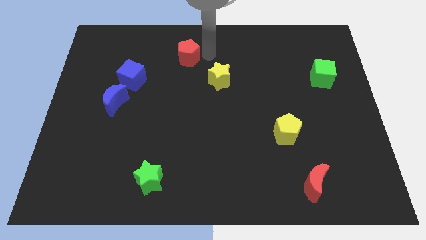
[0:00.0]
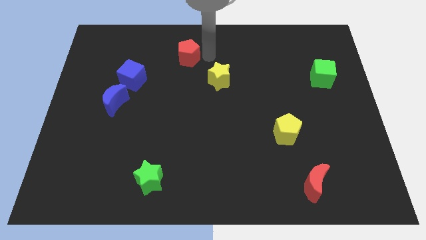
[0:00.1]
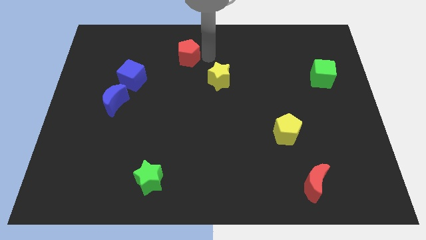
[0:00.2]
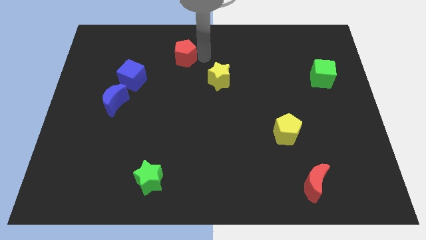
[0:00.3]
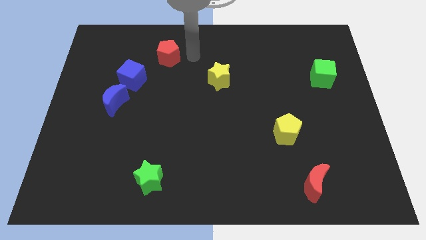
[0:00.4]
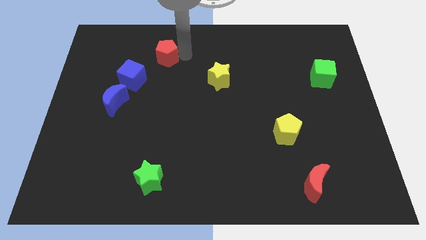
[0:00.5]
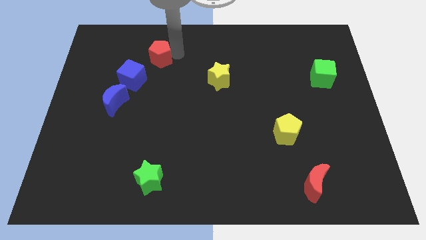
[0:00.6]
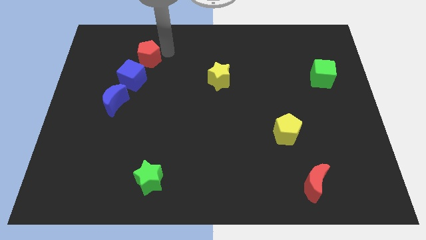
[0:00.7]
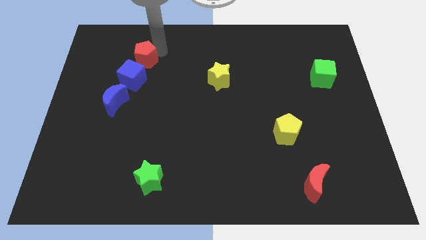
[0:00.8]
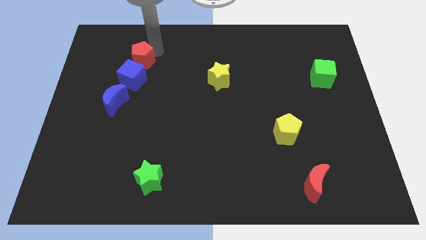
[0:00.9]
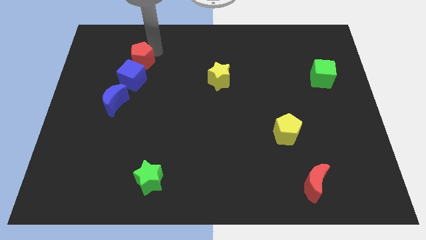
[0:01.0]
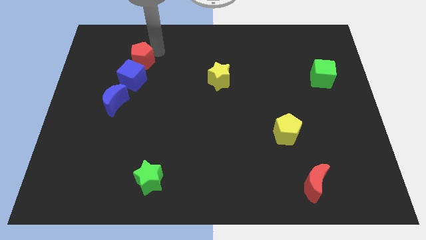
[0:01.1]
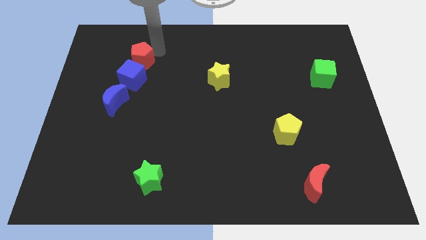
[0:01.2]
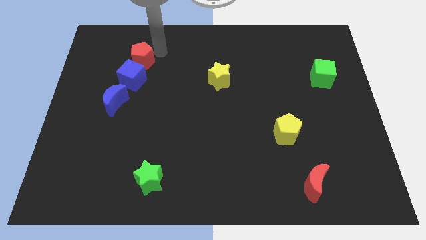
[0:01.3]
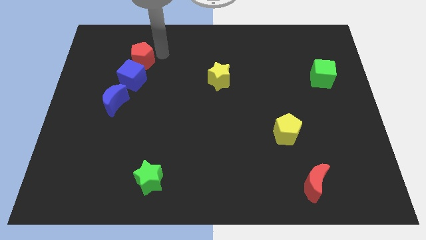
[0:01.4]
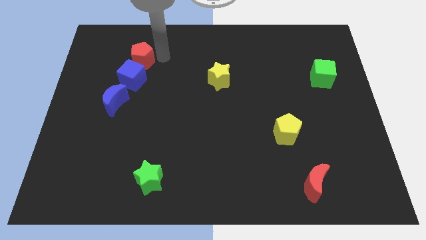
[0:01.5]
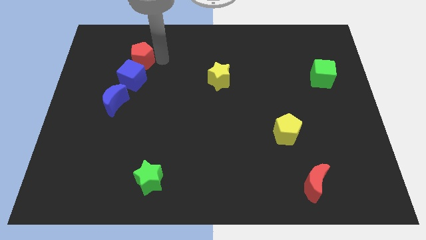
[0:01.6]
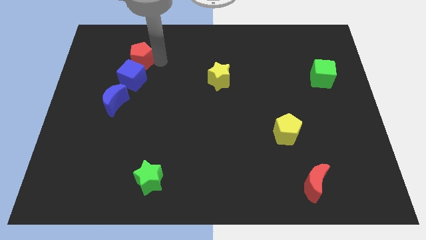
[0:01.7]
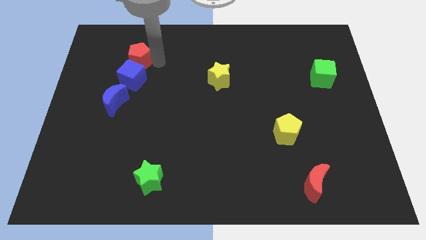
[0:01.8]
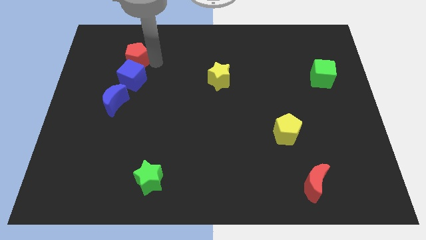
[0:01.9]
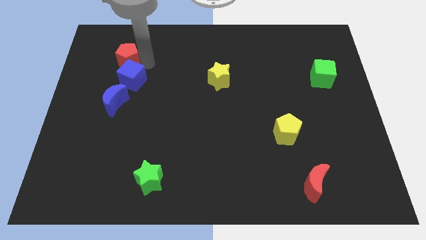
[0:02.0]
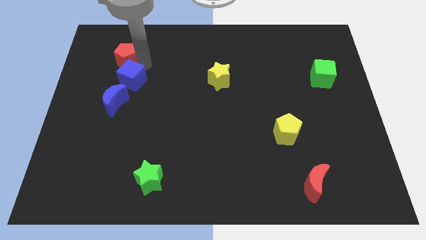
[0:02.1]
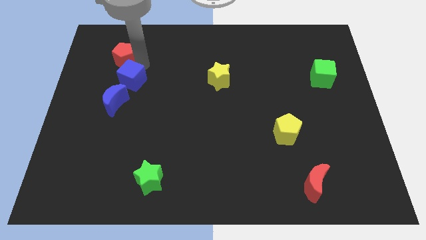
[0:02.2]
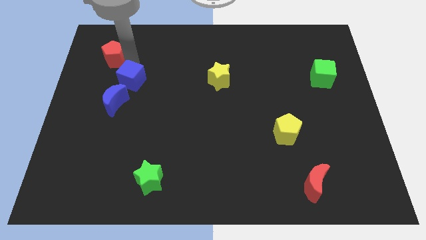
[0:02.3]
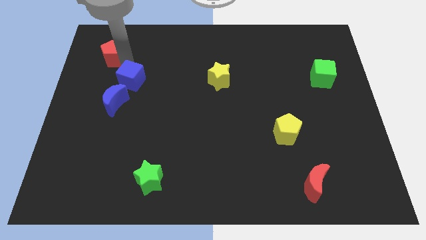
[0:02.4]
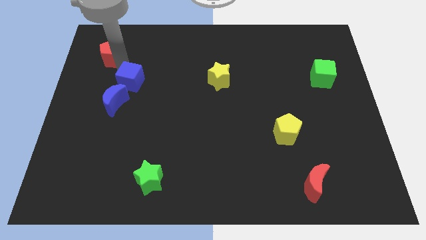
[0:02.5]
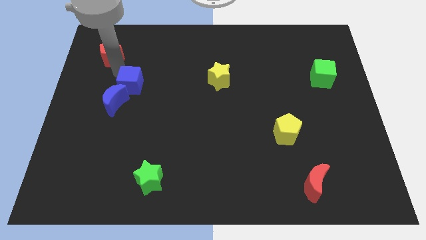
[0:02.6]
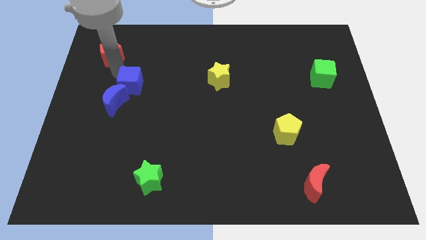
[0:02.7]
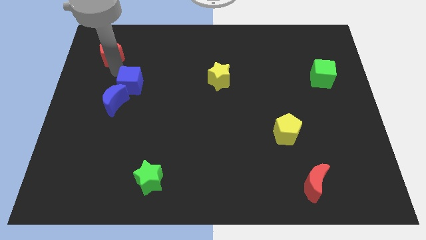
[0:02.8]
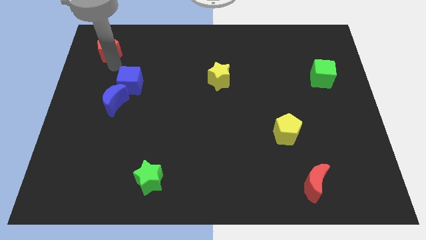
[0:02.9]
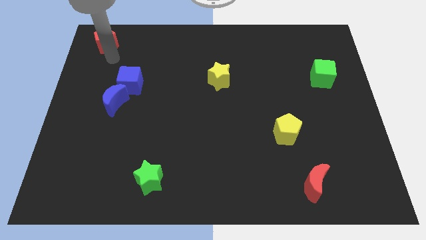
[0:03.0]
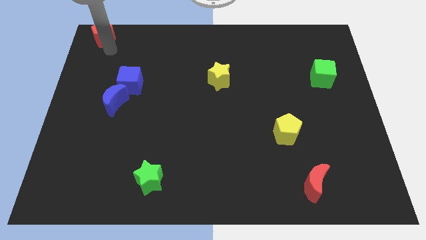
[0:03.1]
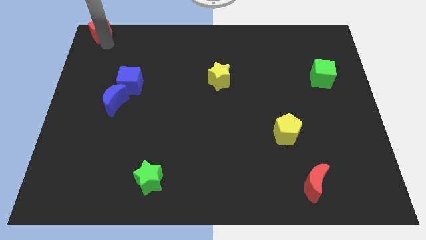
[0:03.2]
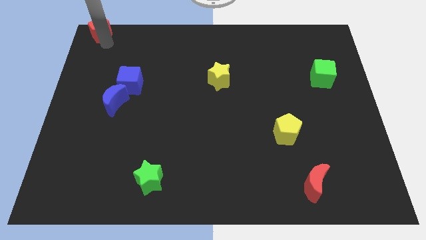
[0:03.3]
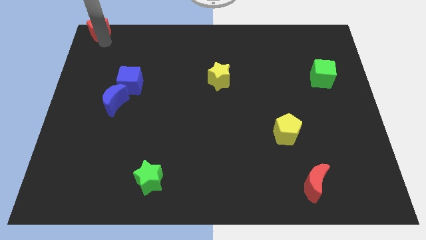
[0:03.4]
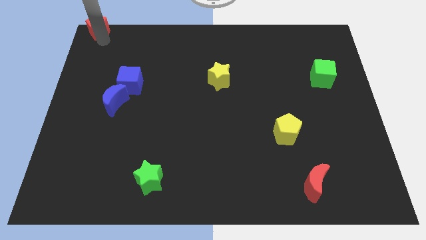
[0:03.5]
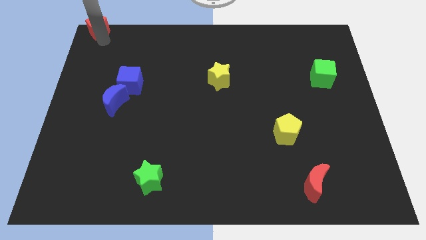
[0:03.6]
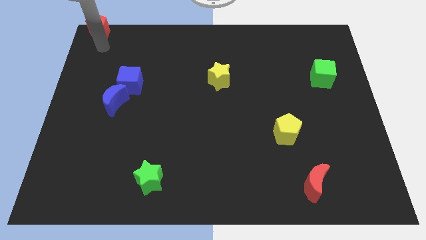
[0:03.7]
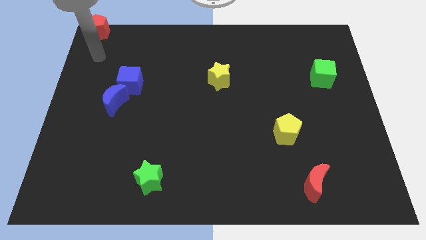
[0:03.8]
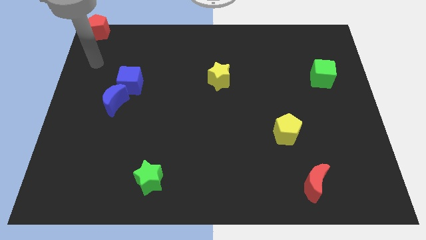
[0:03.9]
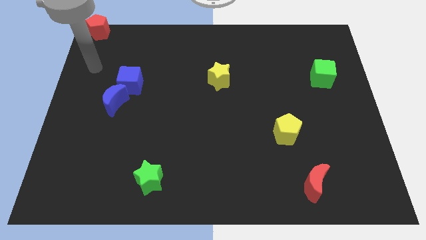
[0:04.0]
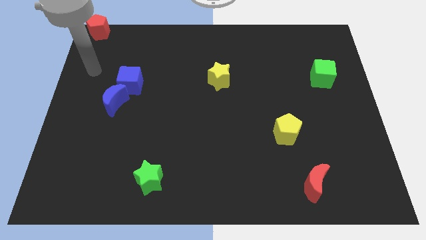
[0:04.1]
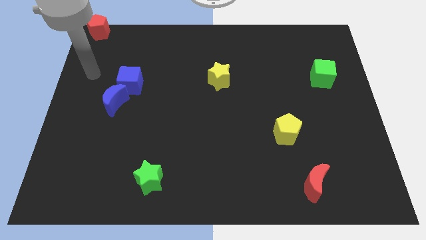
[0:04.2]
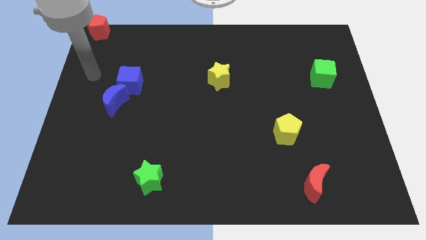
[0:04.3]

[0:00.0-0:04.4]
put the red pentagon to the top left corner of the board

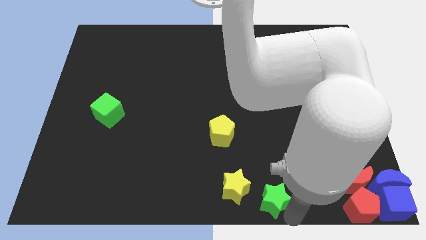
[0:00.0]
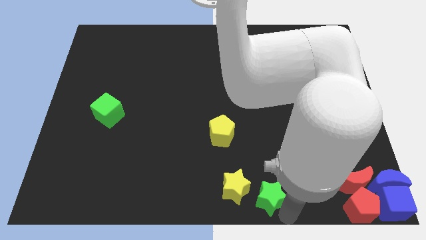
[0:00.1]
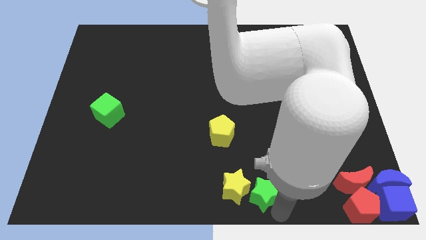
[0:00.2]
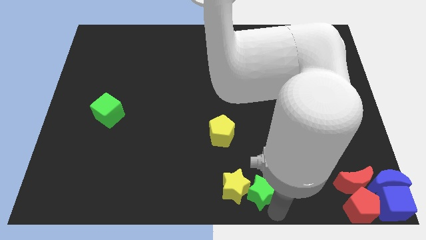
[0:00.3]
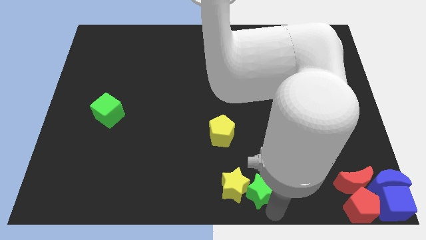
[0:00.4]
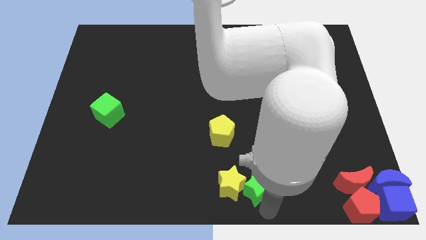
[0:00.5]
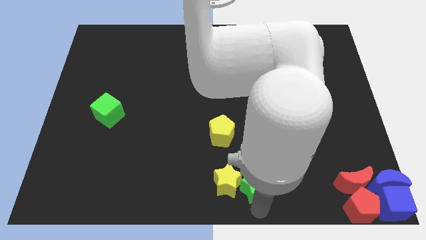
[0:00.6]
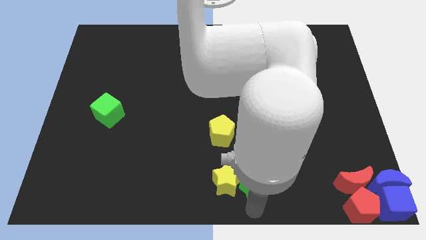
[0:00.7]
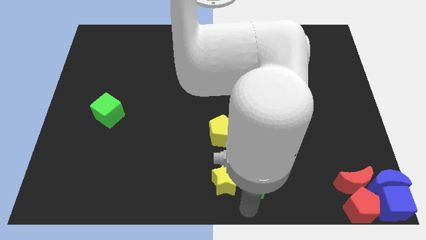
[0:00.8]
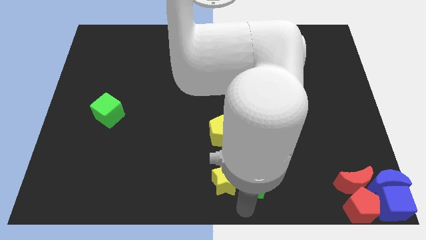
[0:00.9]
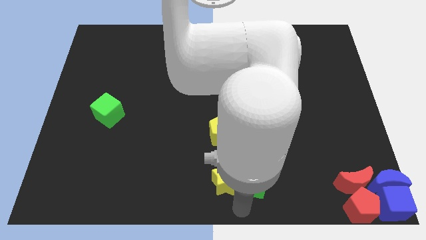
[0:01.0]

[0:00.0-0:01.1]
push the green star to the right of the yellow star

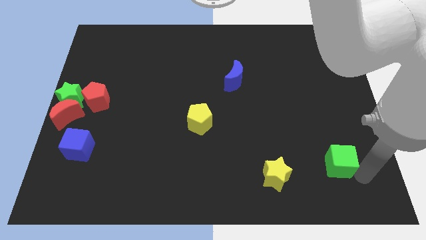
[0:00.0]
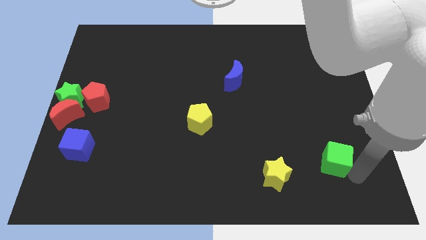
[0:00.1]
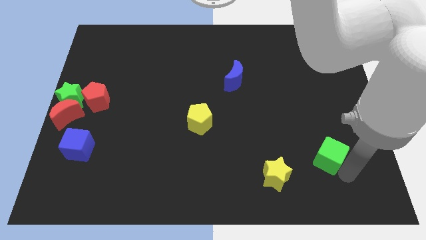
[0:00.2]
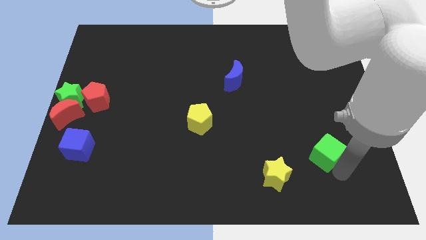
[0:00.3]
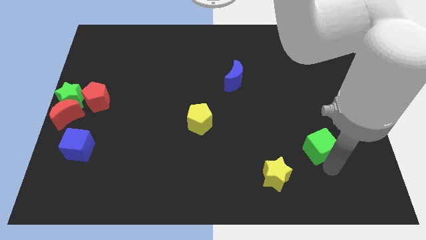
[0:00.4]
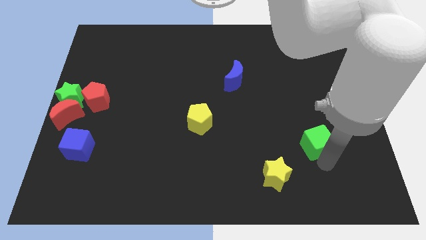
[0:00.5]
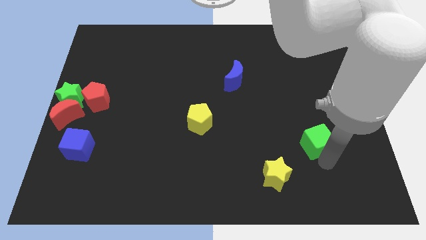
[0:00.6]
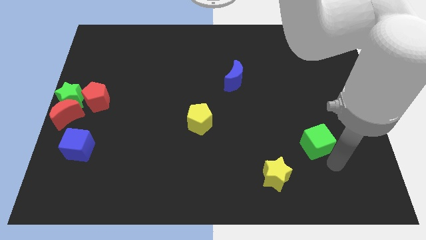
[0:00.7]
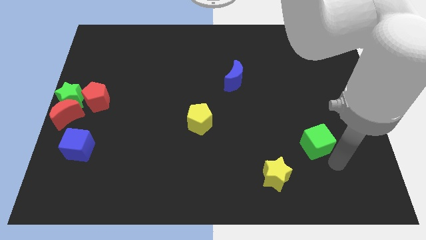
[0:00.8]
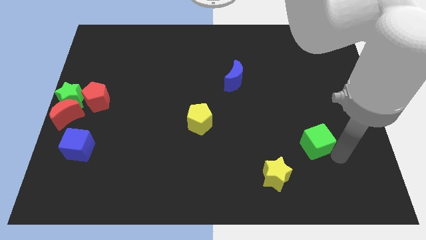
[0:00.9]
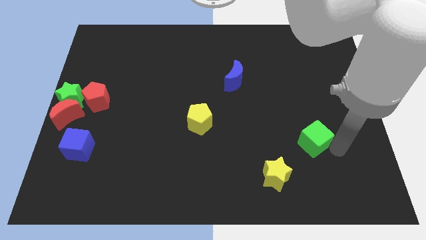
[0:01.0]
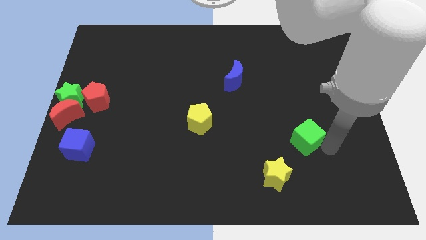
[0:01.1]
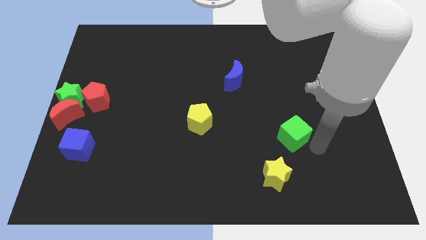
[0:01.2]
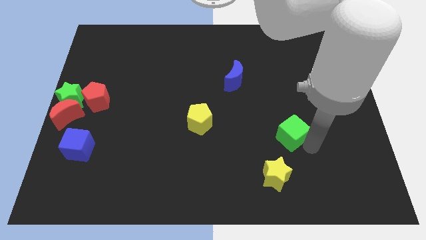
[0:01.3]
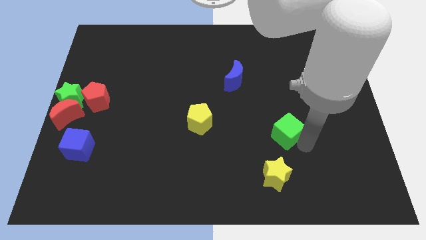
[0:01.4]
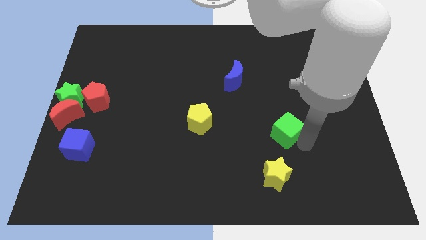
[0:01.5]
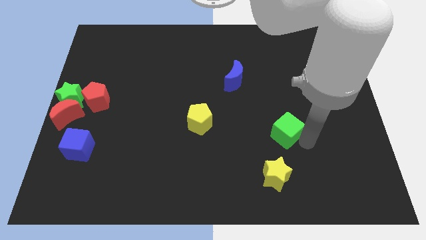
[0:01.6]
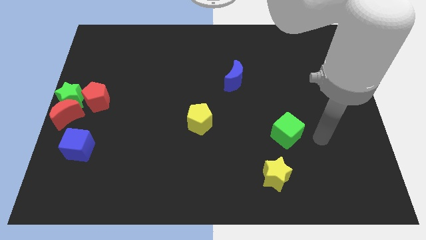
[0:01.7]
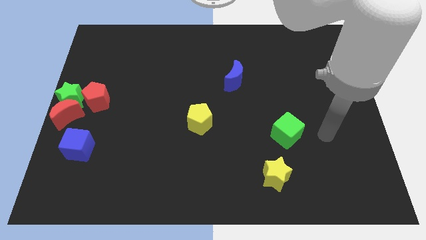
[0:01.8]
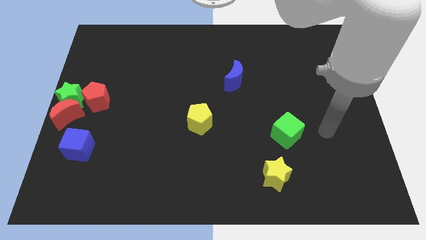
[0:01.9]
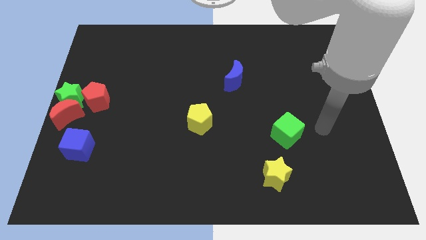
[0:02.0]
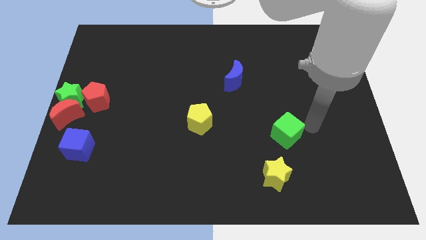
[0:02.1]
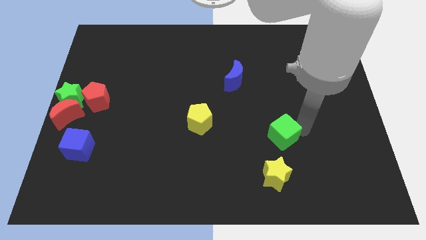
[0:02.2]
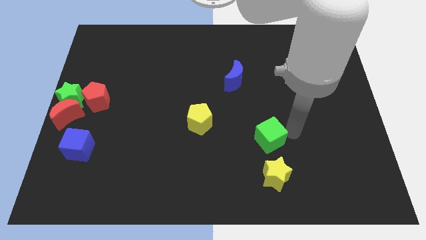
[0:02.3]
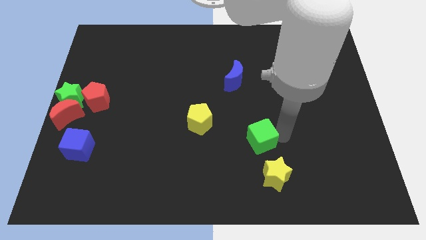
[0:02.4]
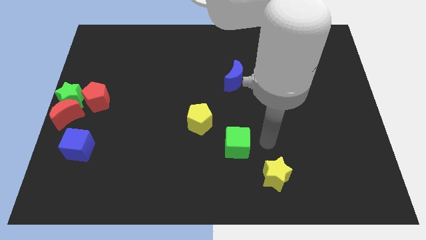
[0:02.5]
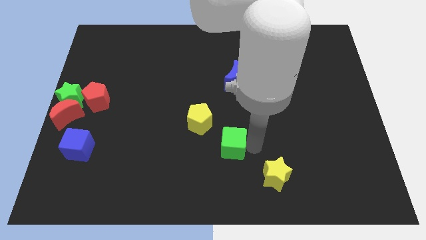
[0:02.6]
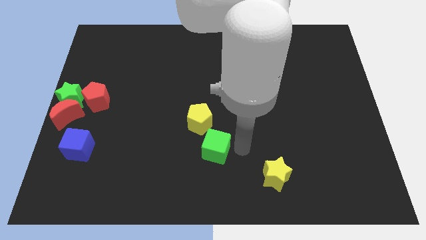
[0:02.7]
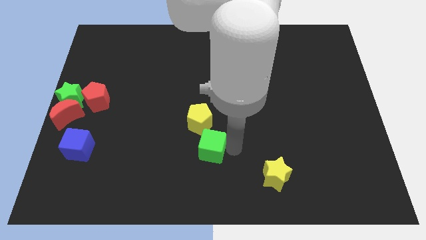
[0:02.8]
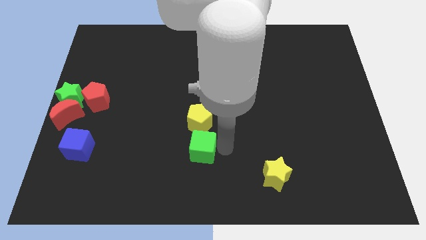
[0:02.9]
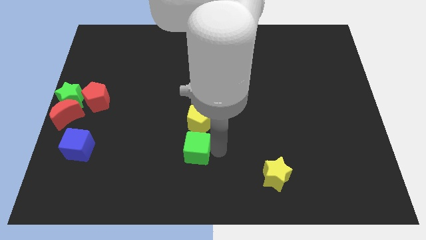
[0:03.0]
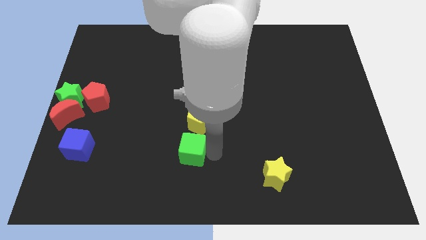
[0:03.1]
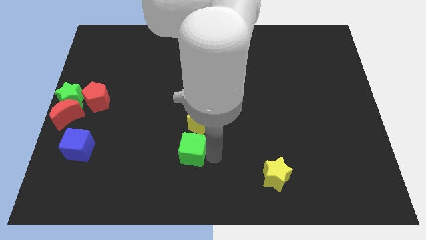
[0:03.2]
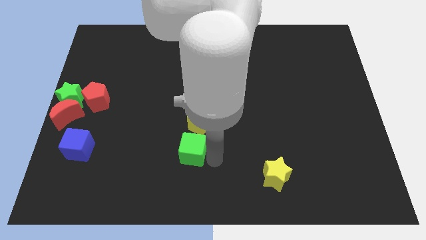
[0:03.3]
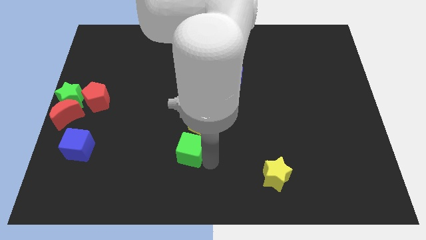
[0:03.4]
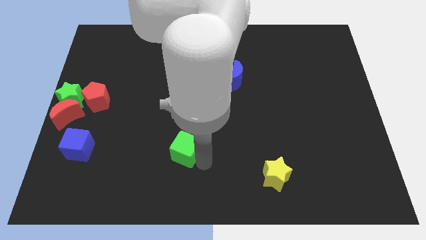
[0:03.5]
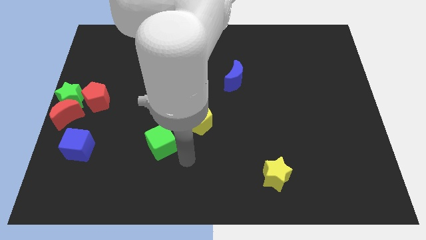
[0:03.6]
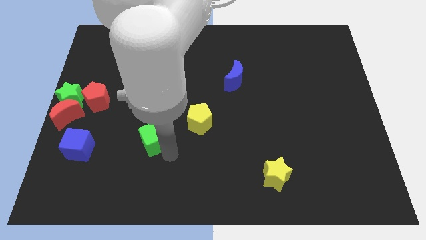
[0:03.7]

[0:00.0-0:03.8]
push the green cube to the left side of the board
